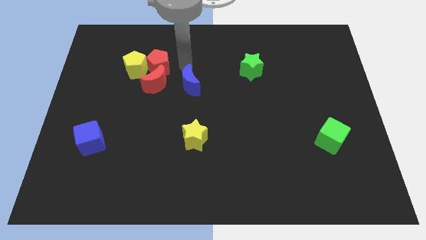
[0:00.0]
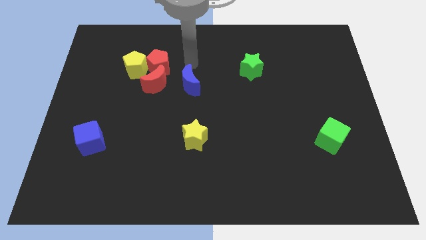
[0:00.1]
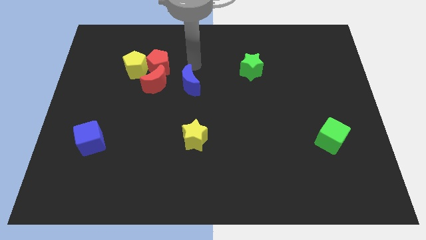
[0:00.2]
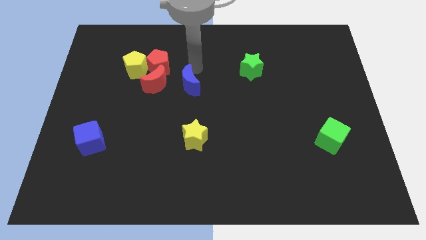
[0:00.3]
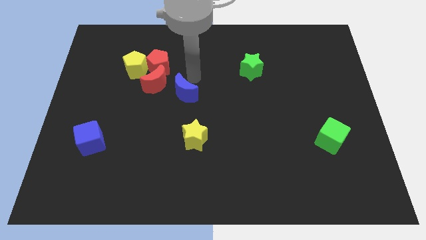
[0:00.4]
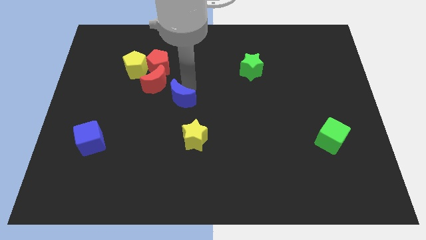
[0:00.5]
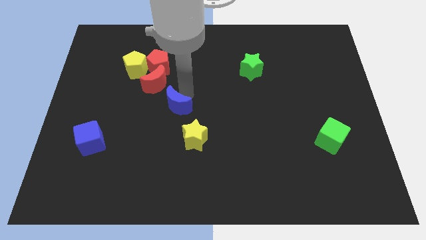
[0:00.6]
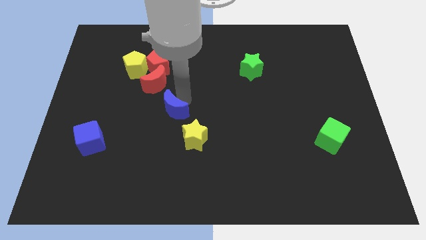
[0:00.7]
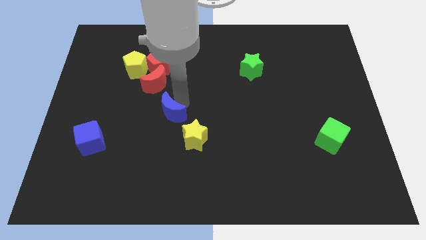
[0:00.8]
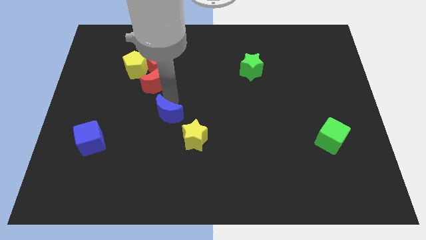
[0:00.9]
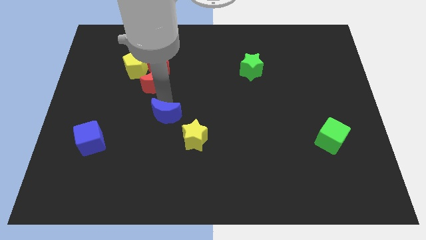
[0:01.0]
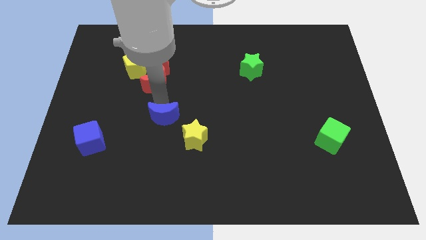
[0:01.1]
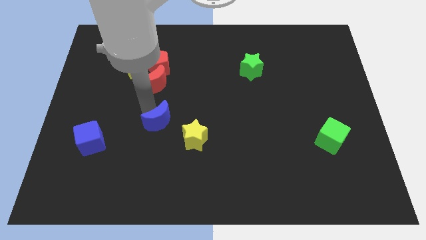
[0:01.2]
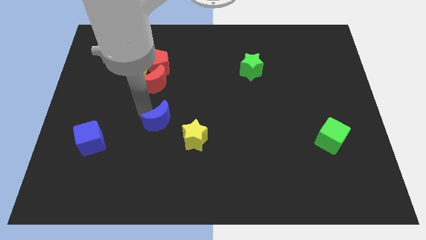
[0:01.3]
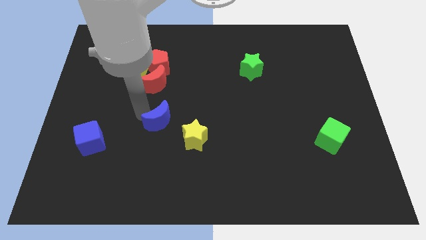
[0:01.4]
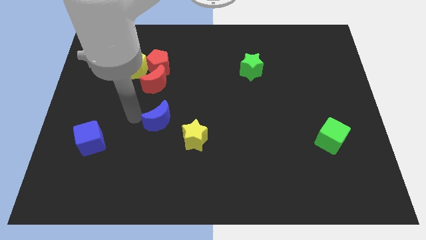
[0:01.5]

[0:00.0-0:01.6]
move the blue crescent below the red crescent

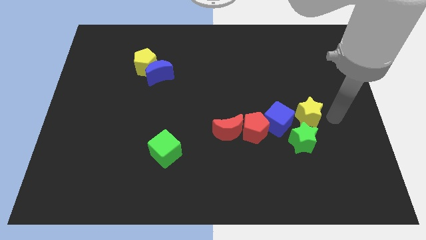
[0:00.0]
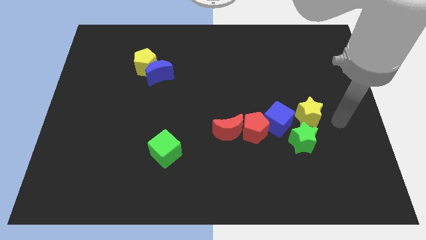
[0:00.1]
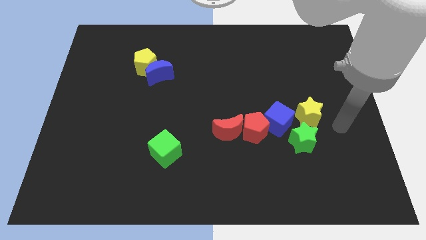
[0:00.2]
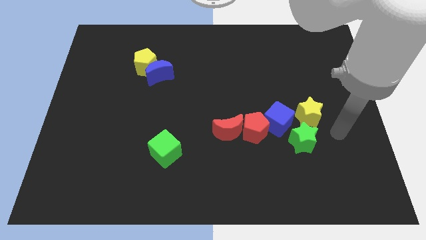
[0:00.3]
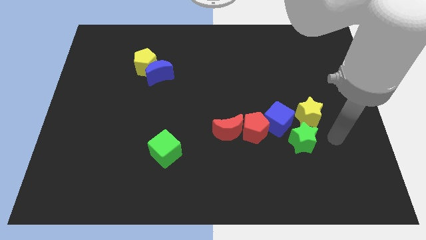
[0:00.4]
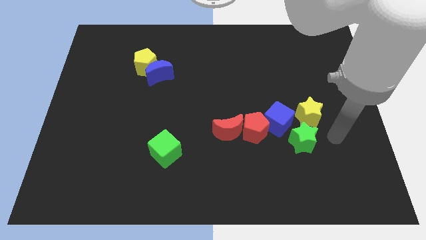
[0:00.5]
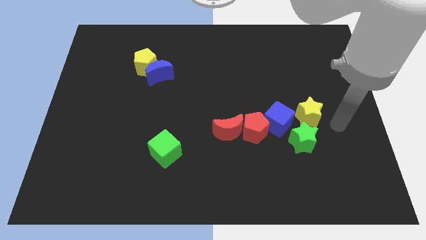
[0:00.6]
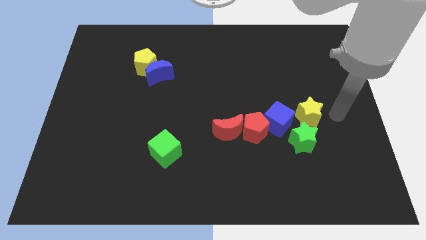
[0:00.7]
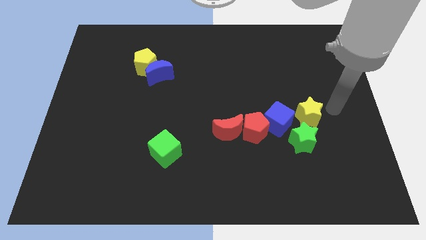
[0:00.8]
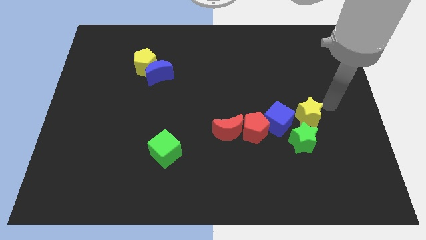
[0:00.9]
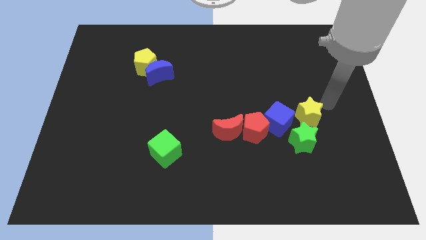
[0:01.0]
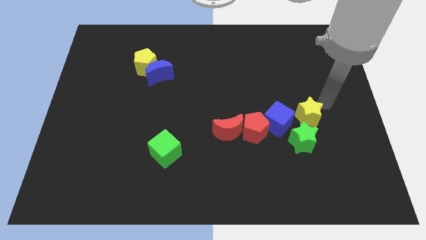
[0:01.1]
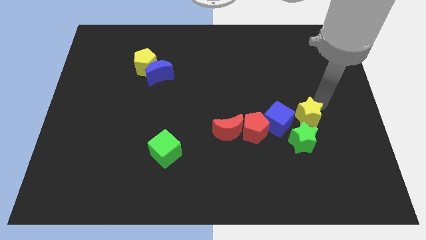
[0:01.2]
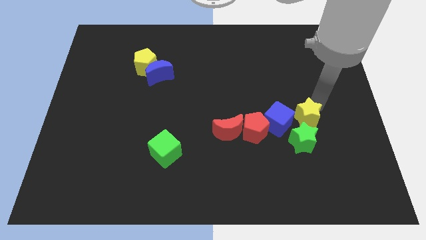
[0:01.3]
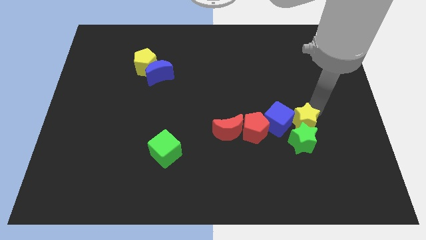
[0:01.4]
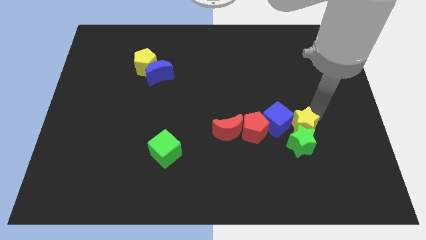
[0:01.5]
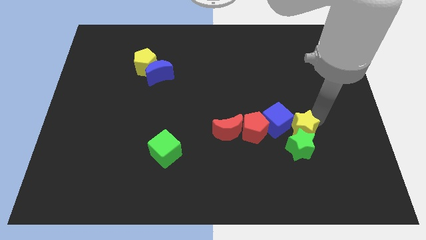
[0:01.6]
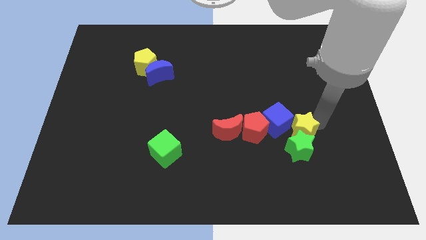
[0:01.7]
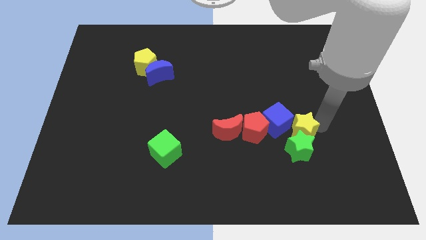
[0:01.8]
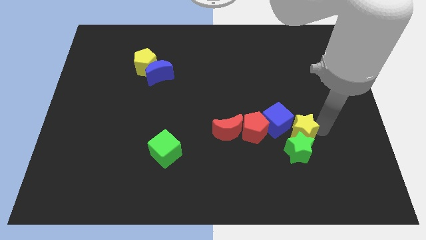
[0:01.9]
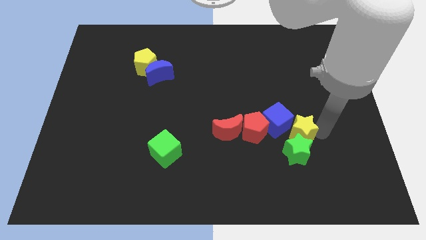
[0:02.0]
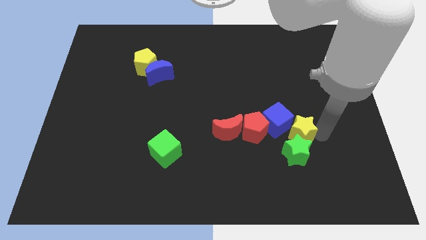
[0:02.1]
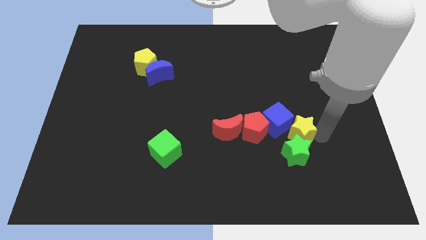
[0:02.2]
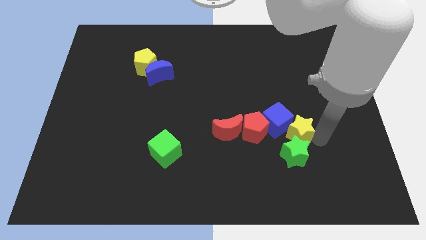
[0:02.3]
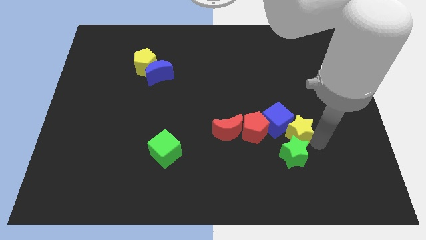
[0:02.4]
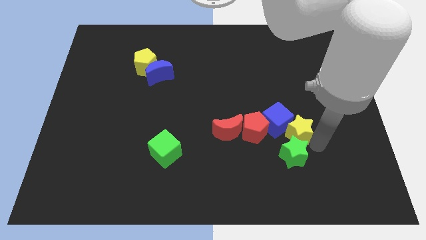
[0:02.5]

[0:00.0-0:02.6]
move the yellow star into the group of blocks

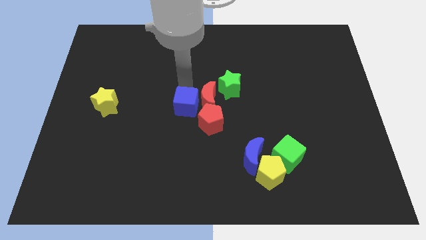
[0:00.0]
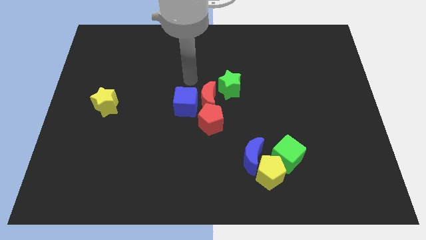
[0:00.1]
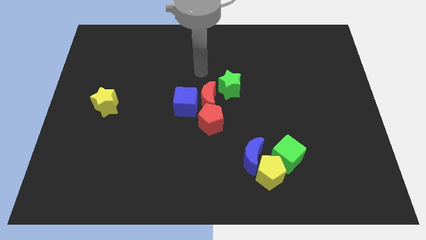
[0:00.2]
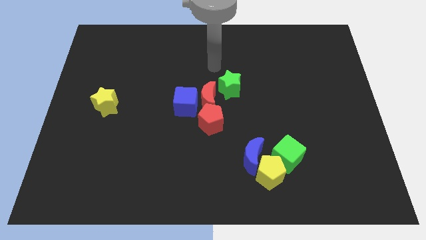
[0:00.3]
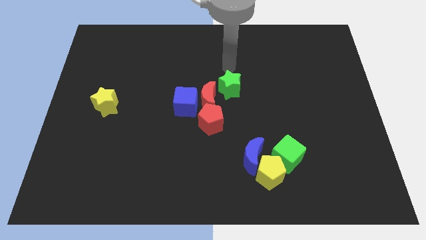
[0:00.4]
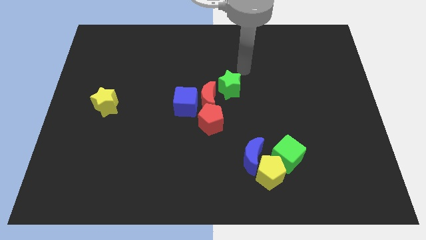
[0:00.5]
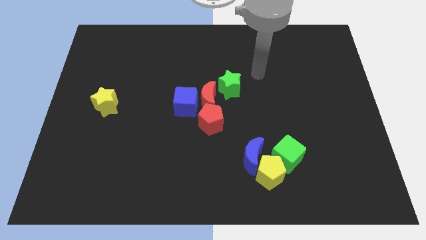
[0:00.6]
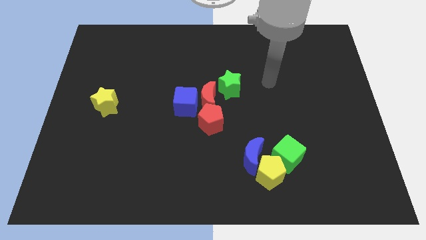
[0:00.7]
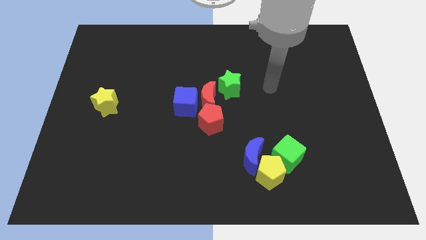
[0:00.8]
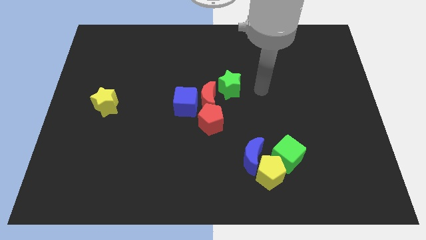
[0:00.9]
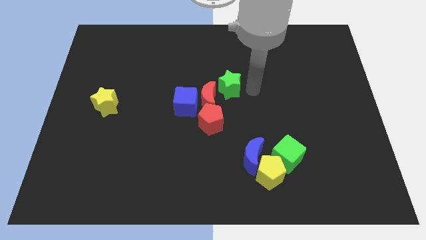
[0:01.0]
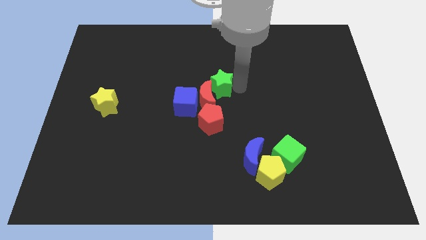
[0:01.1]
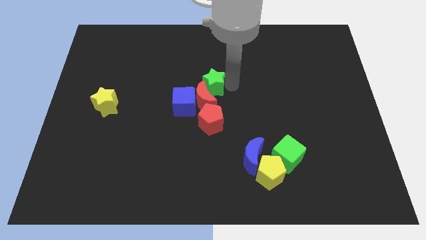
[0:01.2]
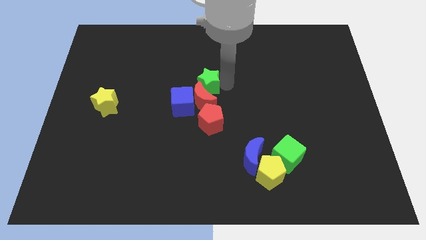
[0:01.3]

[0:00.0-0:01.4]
push the green star into the red crescent

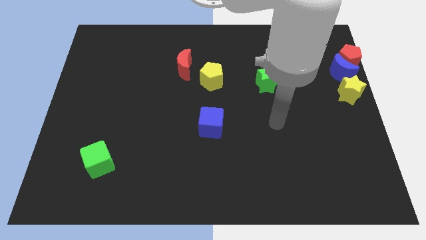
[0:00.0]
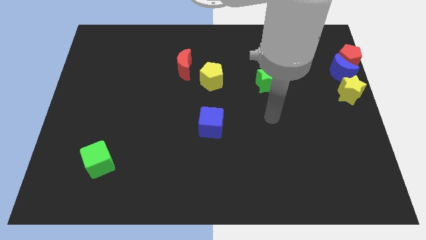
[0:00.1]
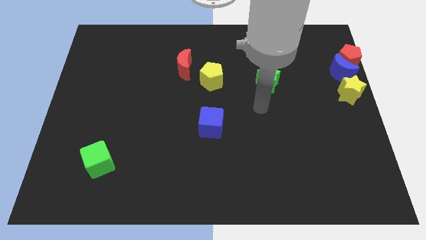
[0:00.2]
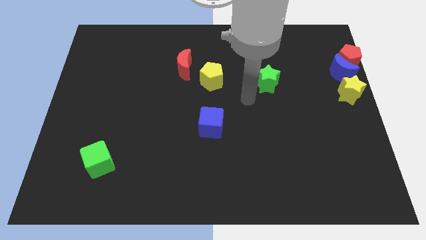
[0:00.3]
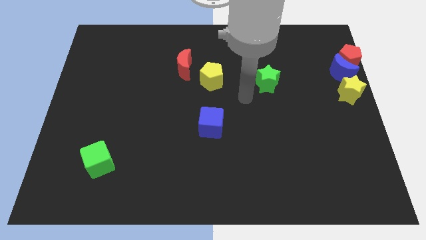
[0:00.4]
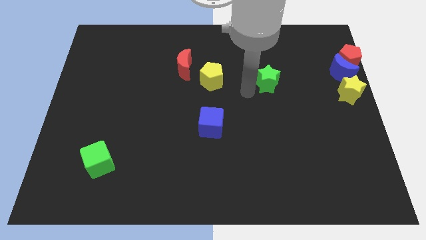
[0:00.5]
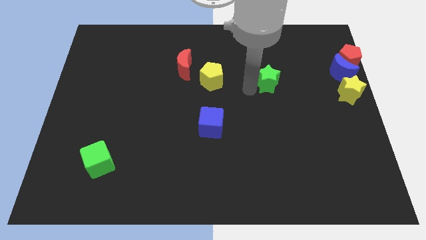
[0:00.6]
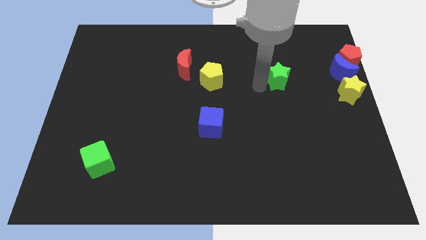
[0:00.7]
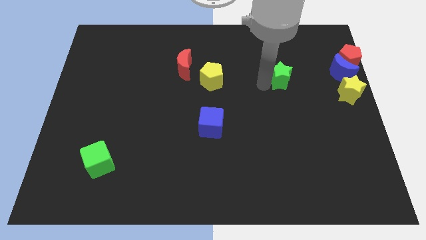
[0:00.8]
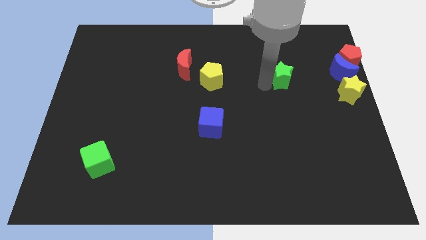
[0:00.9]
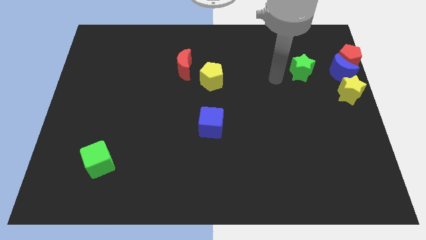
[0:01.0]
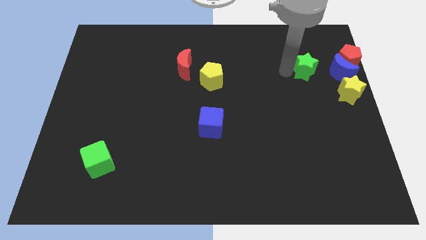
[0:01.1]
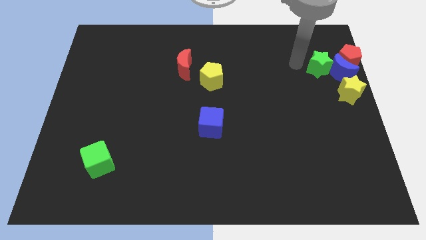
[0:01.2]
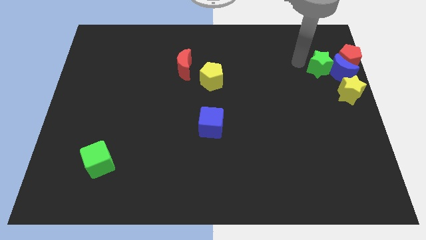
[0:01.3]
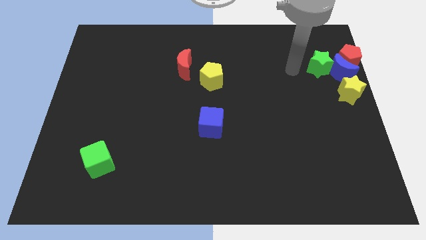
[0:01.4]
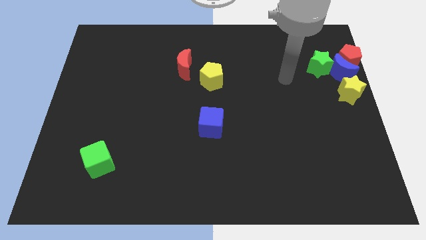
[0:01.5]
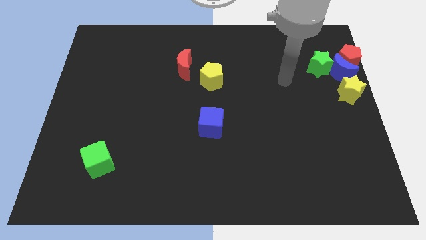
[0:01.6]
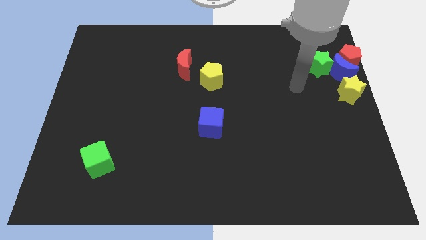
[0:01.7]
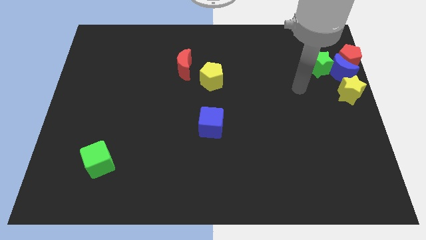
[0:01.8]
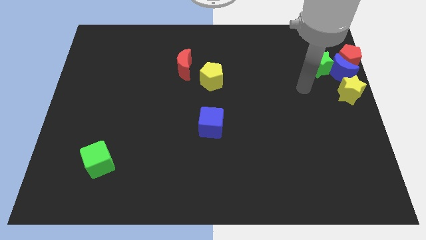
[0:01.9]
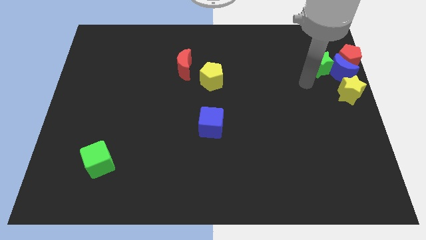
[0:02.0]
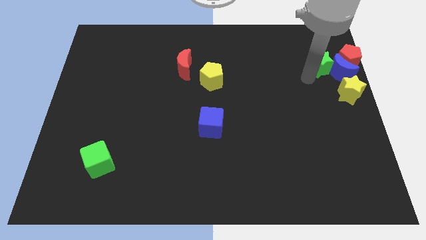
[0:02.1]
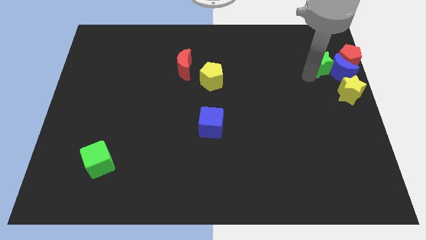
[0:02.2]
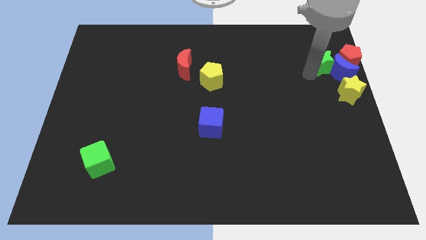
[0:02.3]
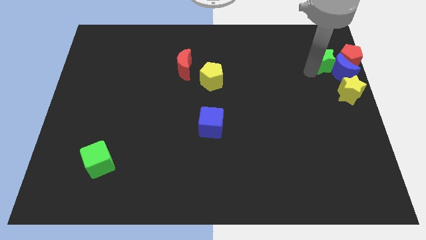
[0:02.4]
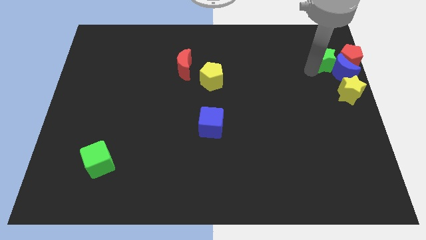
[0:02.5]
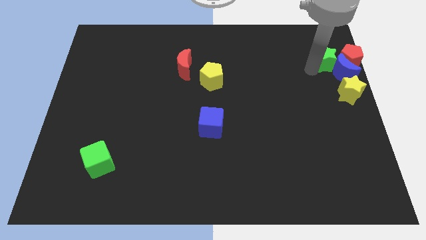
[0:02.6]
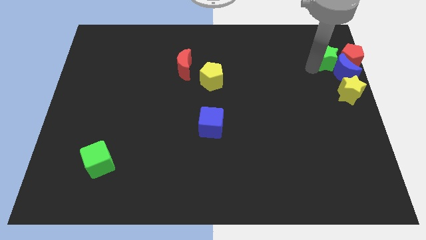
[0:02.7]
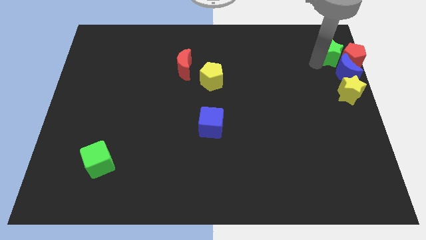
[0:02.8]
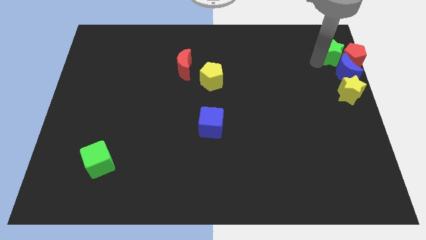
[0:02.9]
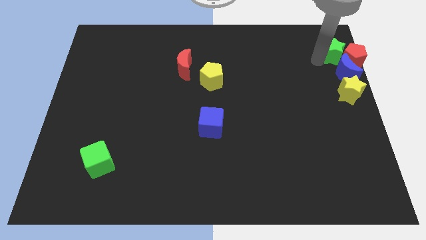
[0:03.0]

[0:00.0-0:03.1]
place the green star to the left side top of the red pentagon

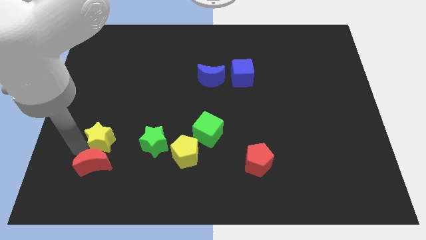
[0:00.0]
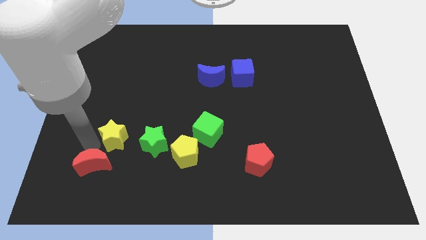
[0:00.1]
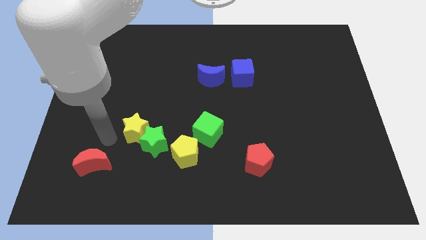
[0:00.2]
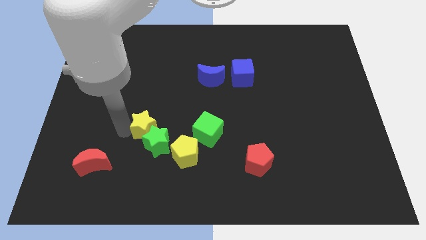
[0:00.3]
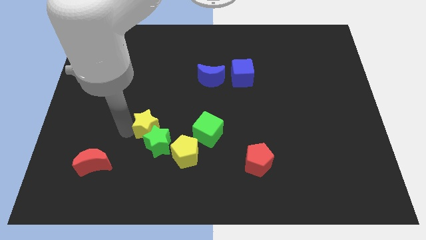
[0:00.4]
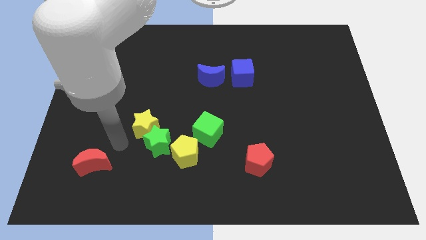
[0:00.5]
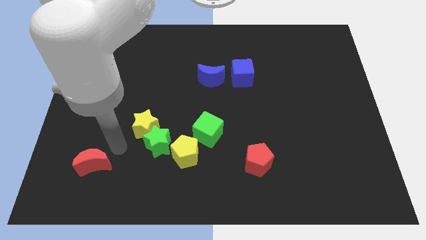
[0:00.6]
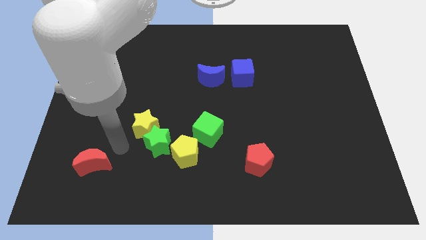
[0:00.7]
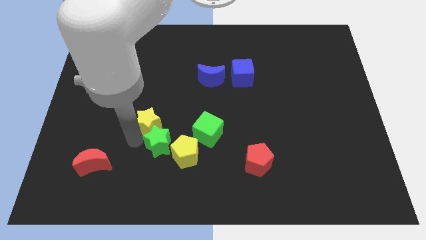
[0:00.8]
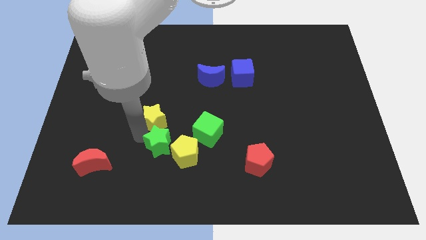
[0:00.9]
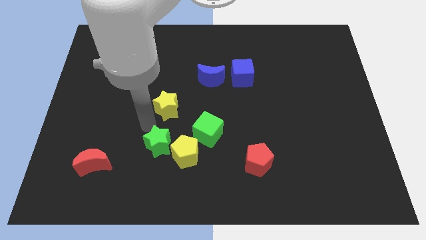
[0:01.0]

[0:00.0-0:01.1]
move the yellow star to the top side of the green star
